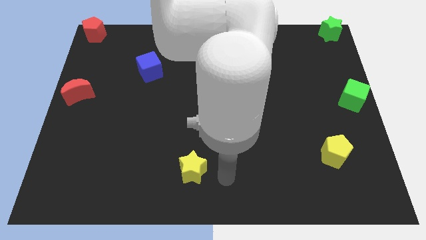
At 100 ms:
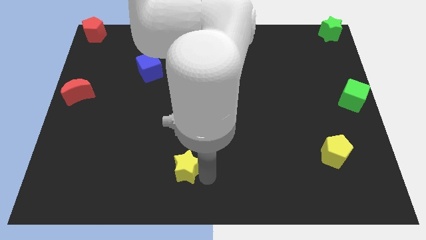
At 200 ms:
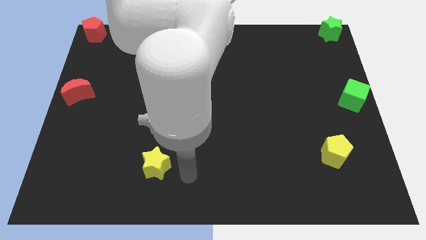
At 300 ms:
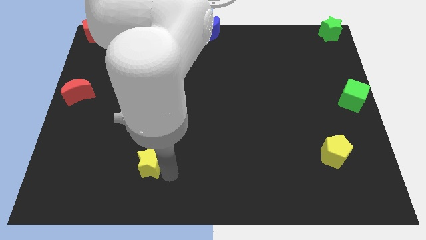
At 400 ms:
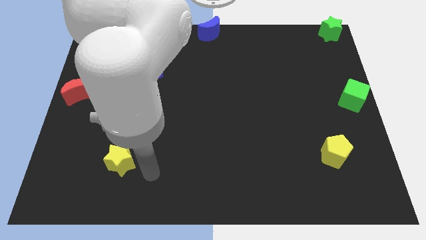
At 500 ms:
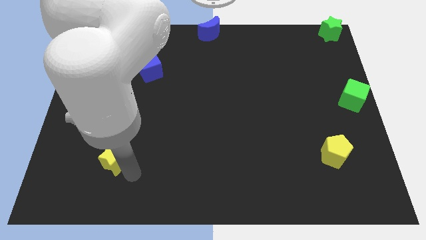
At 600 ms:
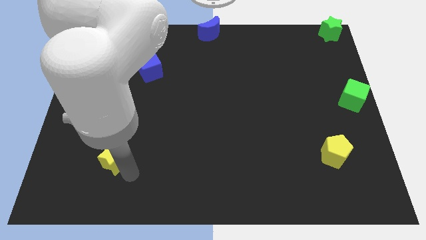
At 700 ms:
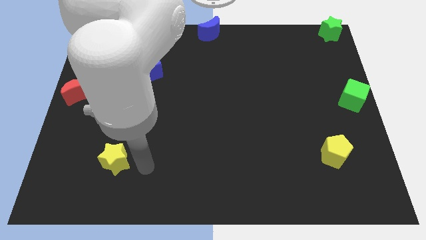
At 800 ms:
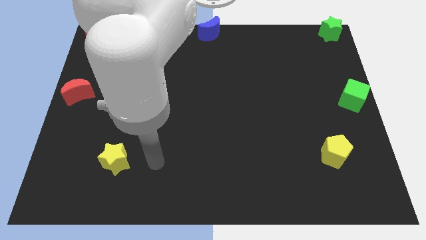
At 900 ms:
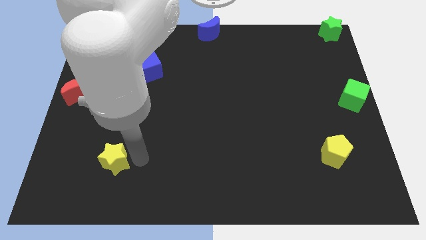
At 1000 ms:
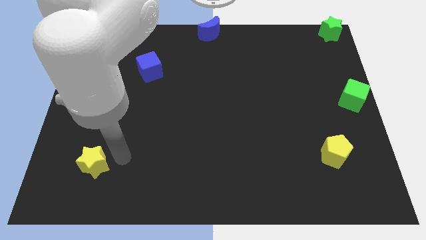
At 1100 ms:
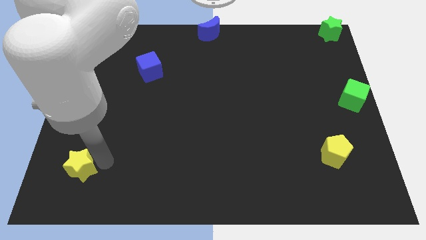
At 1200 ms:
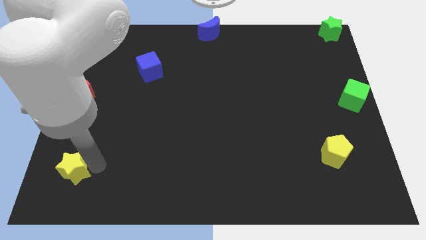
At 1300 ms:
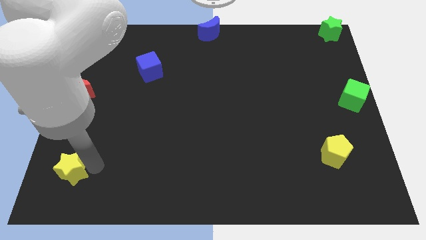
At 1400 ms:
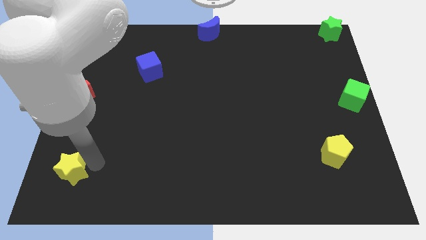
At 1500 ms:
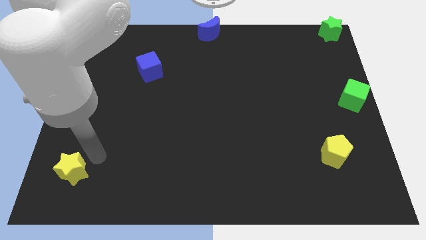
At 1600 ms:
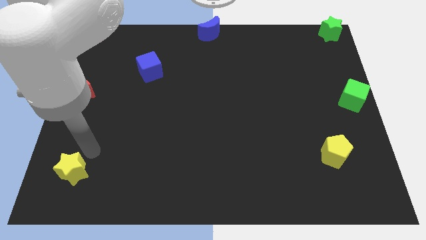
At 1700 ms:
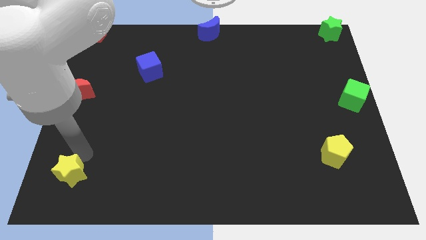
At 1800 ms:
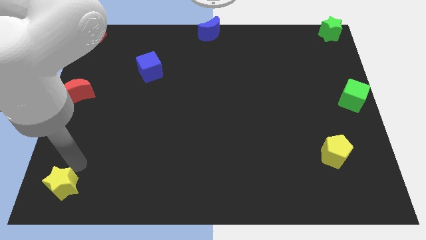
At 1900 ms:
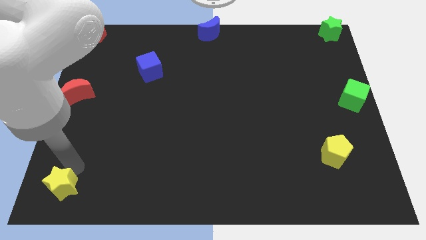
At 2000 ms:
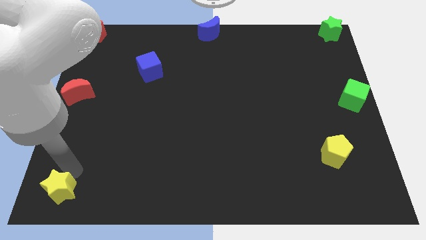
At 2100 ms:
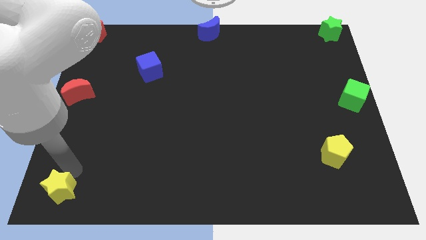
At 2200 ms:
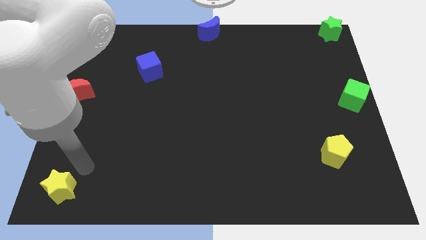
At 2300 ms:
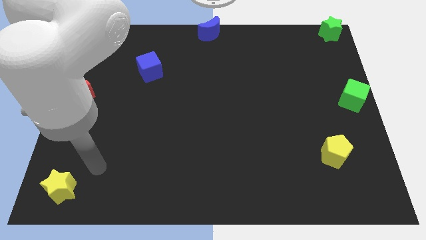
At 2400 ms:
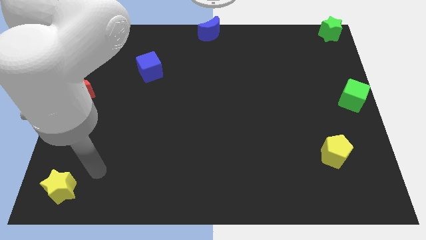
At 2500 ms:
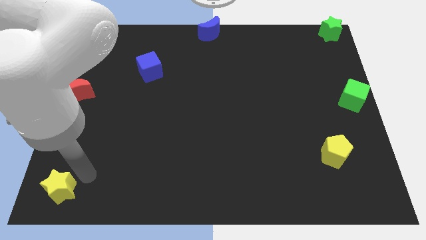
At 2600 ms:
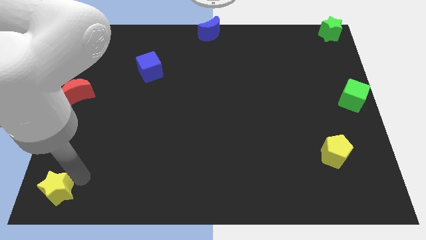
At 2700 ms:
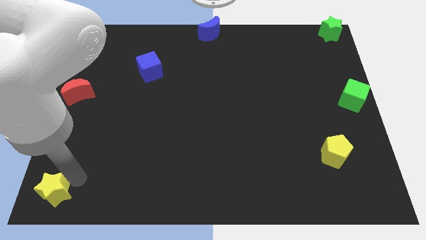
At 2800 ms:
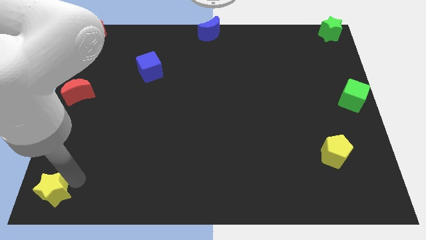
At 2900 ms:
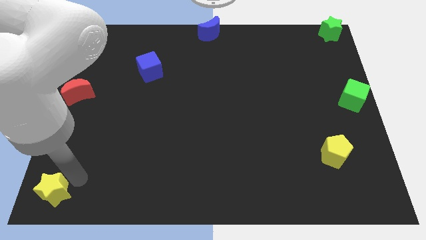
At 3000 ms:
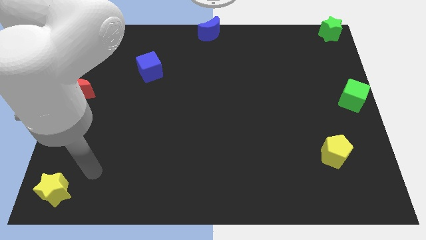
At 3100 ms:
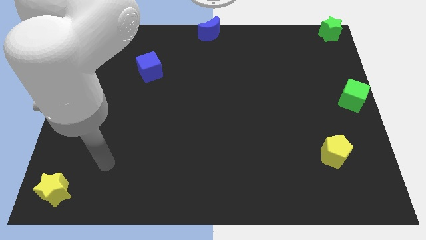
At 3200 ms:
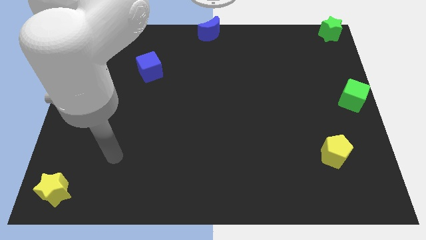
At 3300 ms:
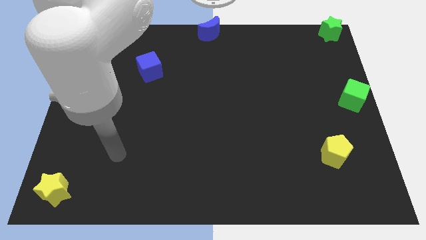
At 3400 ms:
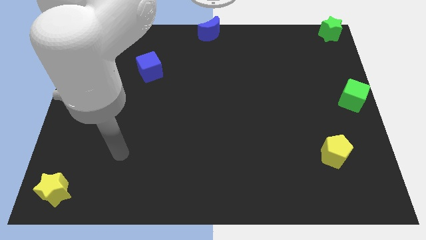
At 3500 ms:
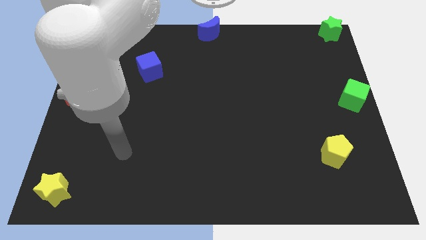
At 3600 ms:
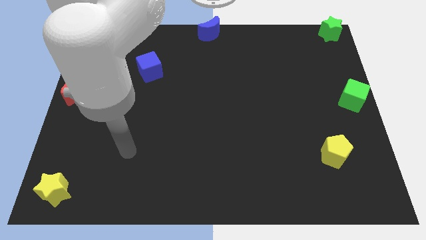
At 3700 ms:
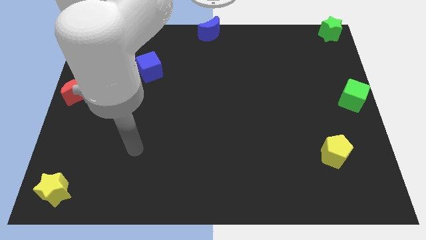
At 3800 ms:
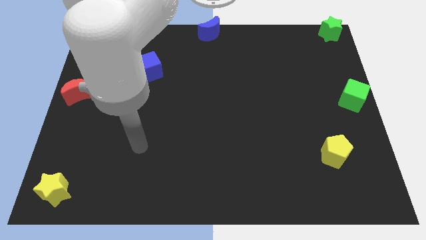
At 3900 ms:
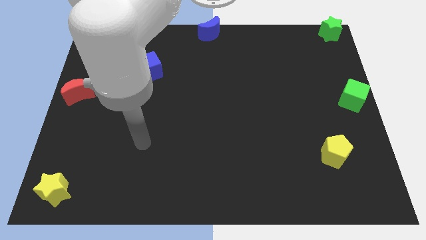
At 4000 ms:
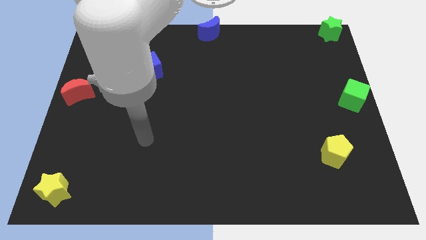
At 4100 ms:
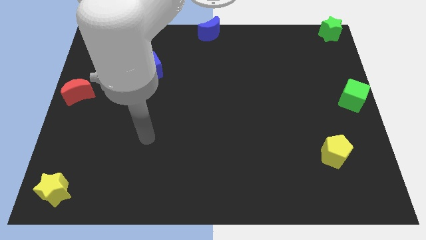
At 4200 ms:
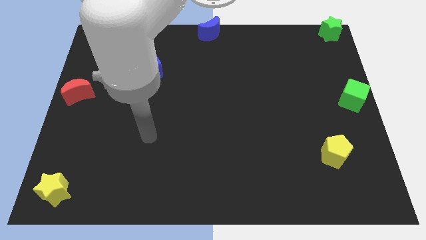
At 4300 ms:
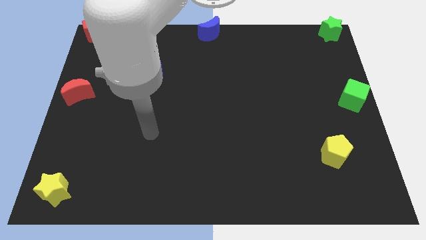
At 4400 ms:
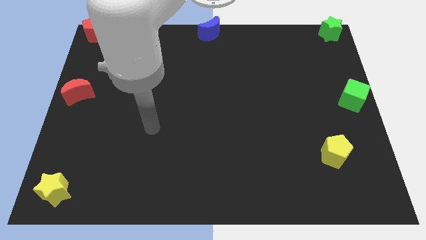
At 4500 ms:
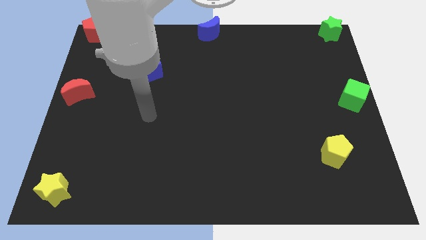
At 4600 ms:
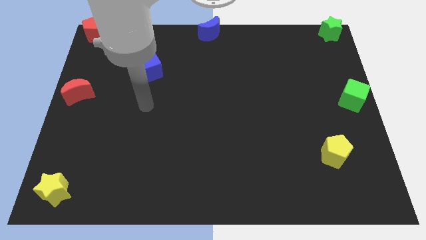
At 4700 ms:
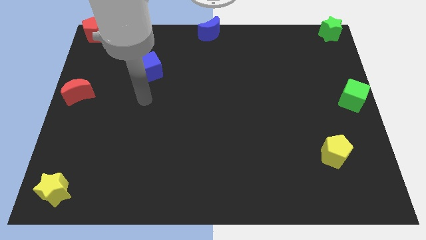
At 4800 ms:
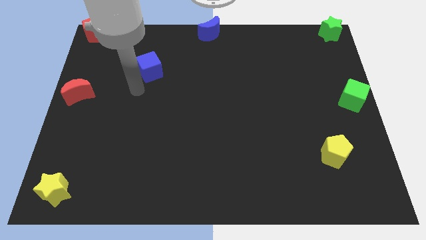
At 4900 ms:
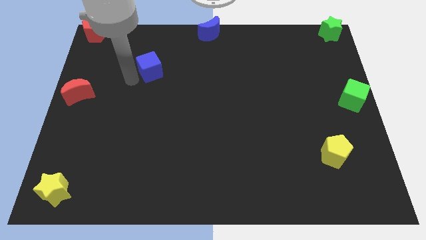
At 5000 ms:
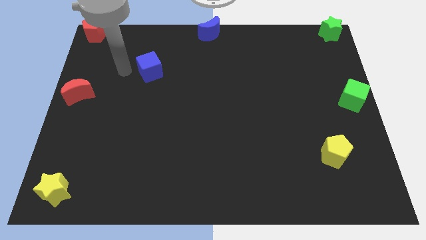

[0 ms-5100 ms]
place a yellow star at the bottom left corner of the board

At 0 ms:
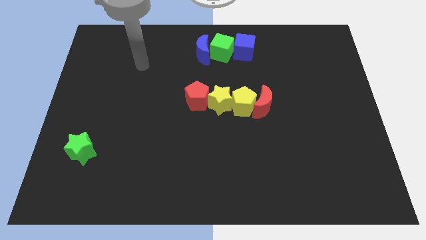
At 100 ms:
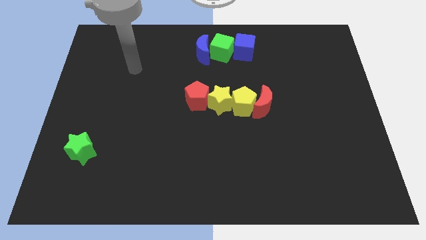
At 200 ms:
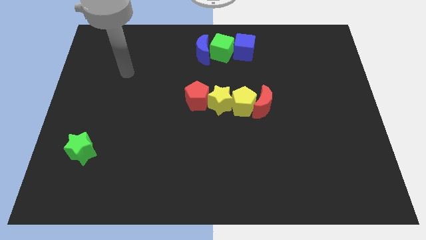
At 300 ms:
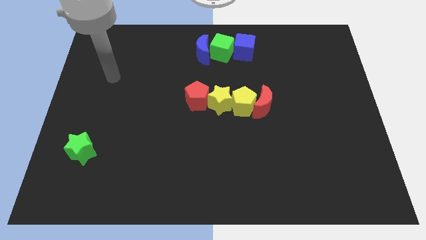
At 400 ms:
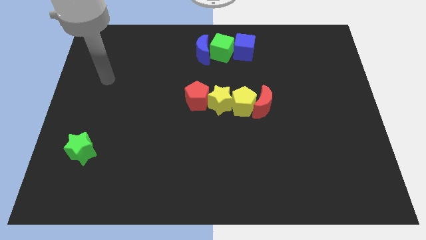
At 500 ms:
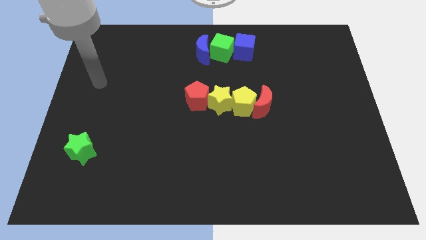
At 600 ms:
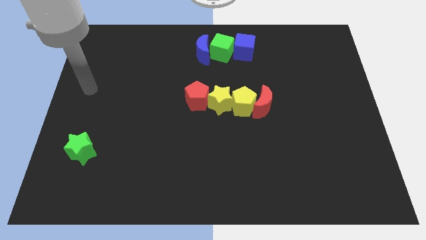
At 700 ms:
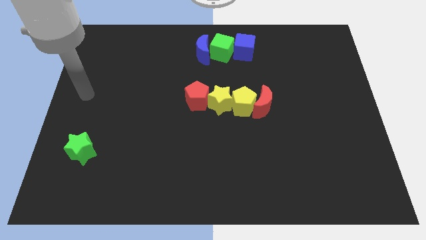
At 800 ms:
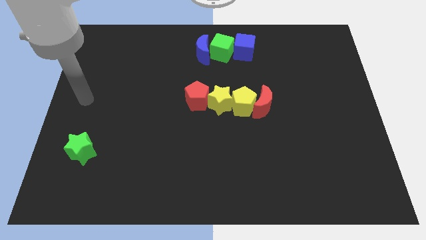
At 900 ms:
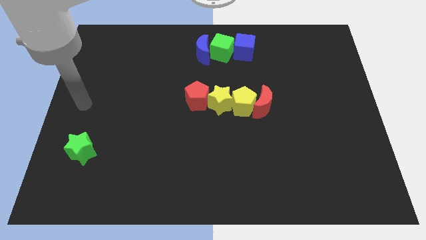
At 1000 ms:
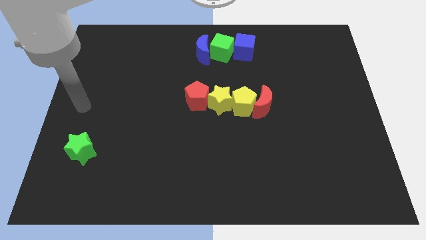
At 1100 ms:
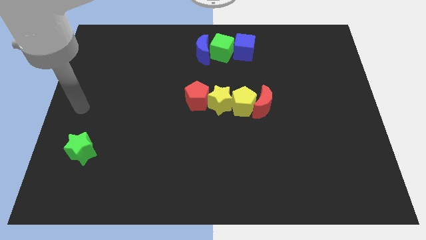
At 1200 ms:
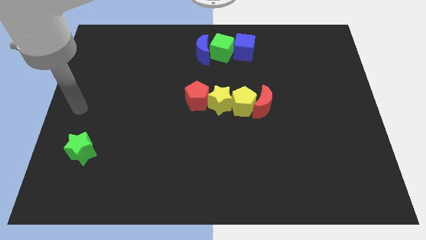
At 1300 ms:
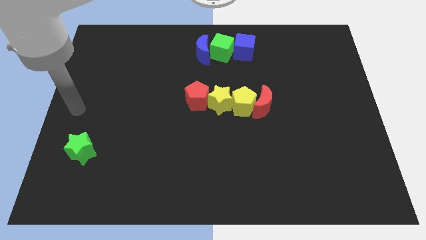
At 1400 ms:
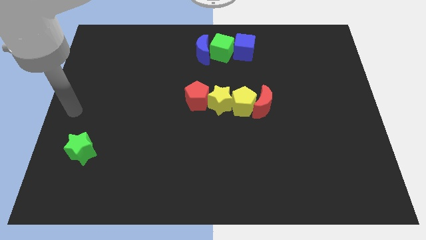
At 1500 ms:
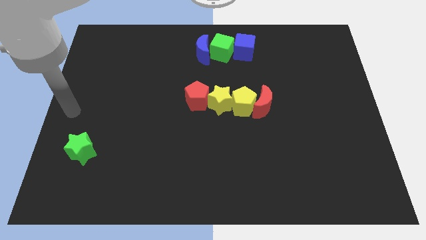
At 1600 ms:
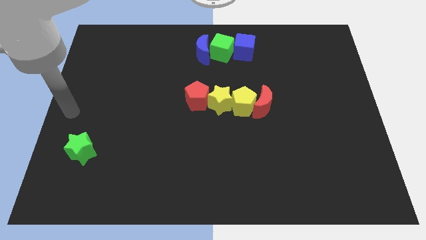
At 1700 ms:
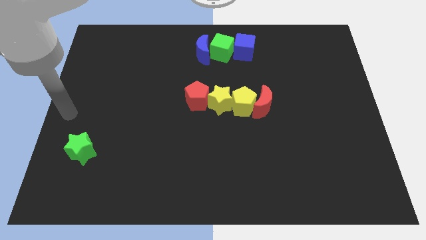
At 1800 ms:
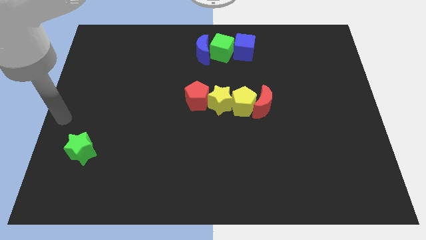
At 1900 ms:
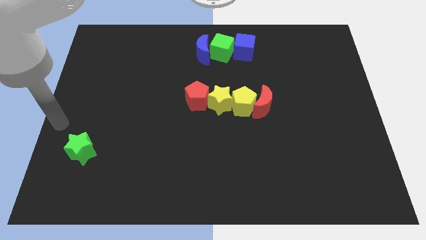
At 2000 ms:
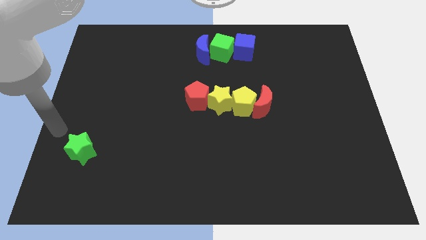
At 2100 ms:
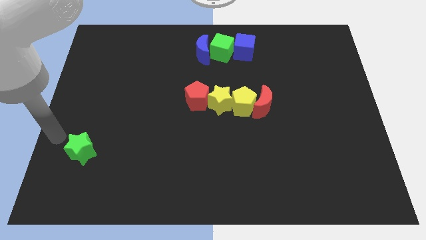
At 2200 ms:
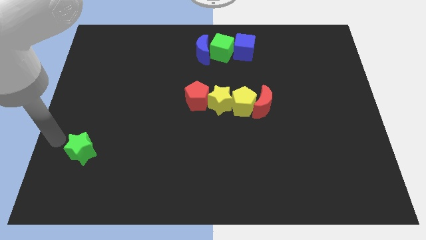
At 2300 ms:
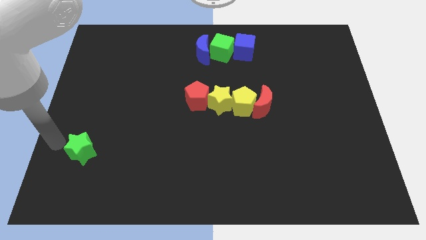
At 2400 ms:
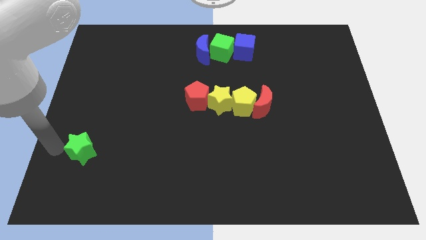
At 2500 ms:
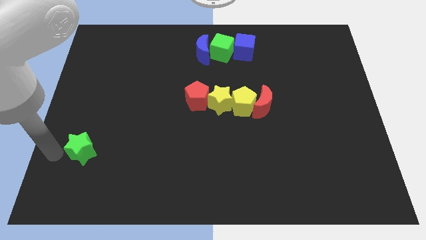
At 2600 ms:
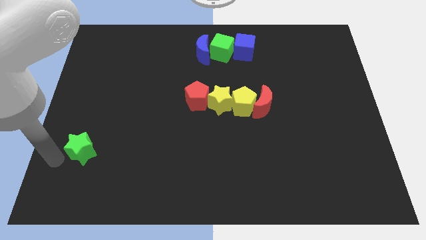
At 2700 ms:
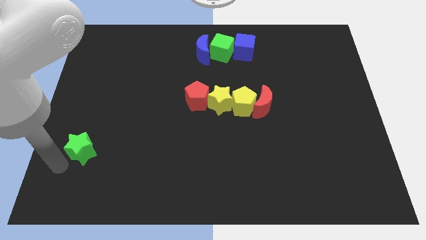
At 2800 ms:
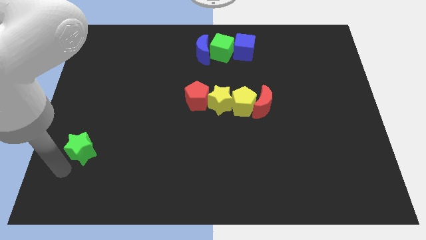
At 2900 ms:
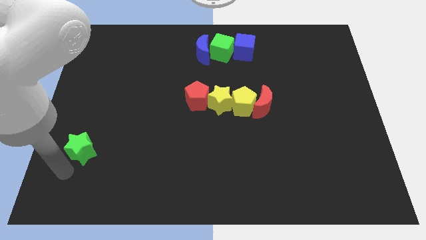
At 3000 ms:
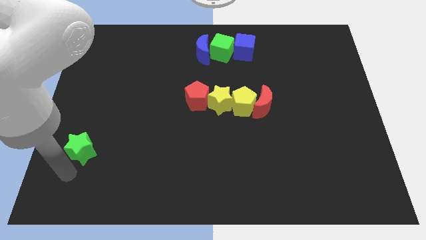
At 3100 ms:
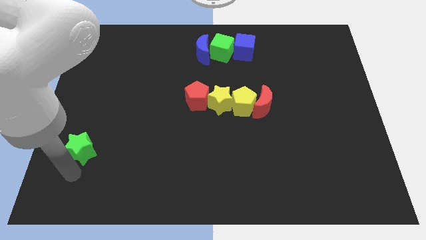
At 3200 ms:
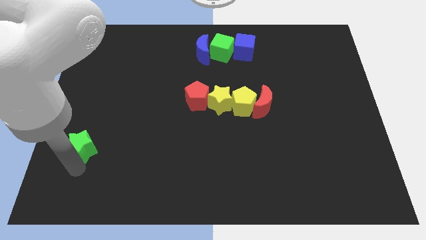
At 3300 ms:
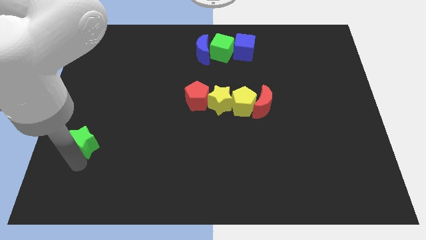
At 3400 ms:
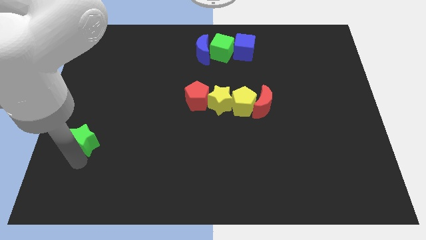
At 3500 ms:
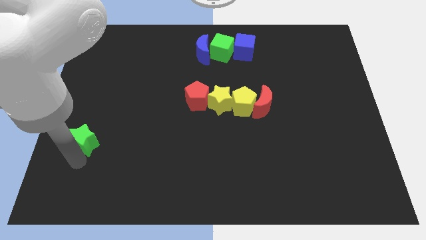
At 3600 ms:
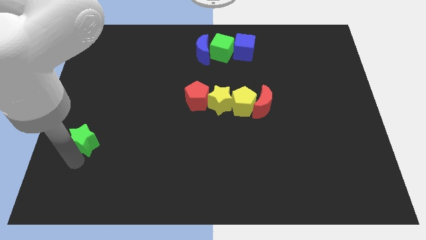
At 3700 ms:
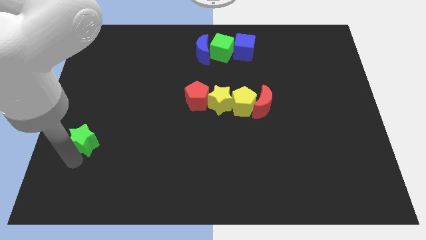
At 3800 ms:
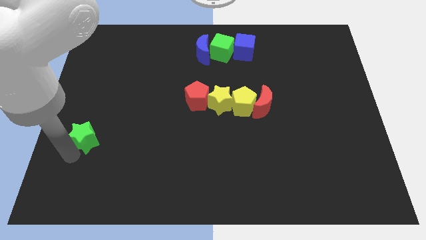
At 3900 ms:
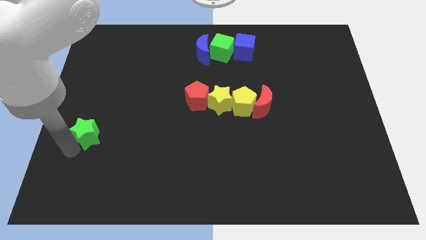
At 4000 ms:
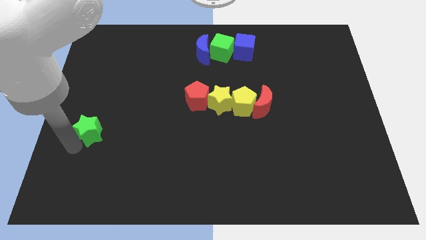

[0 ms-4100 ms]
move green star towards upside
